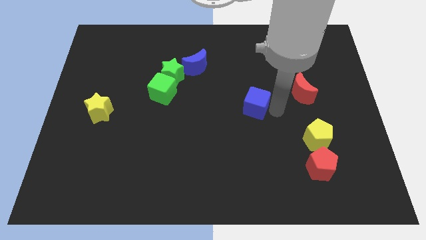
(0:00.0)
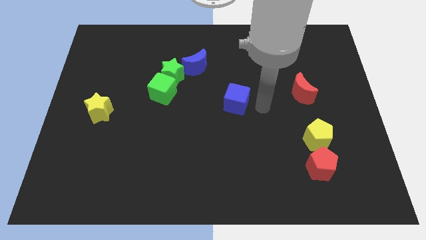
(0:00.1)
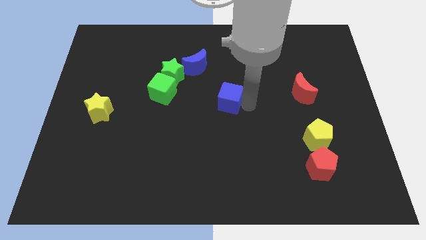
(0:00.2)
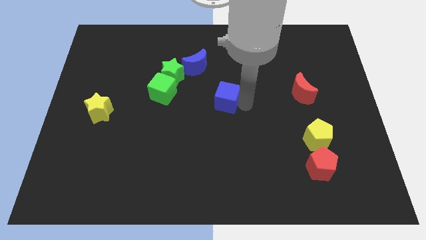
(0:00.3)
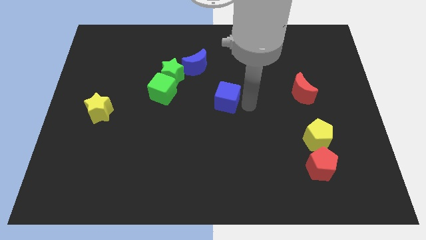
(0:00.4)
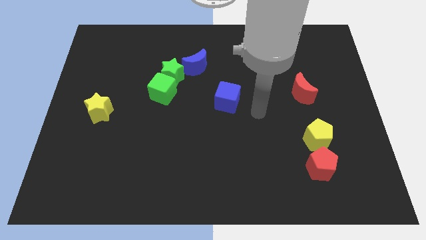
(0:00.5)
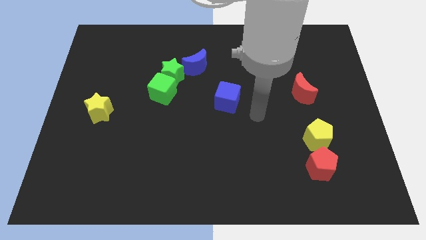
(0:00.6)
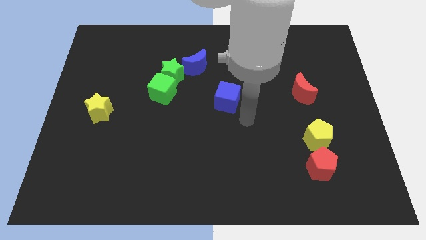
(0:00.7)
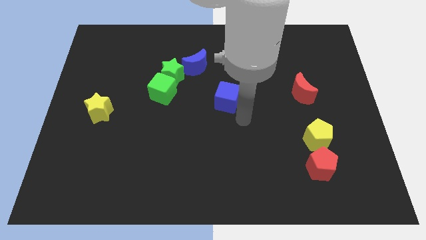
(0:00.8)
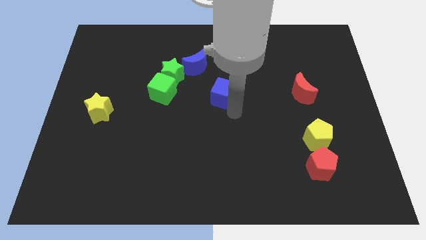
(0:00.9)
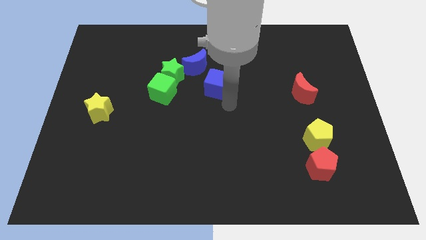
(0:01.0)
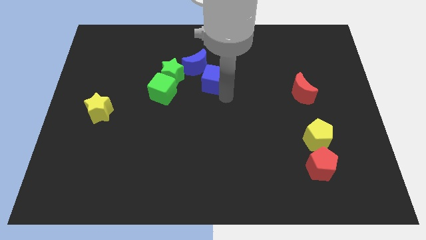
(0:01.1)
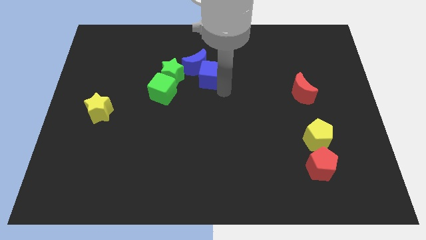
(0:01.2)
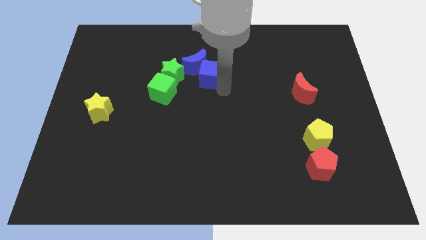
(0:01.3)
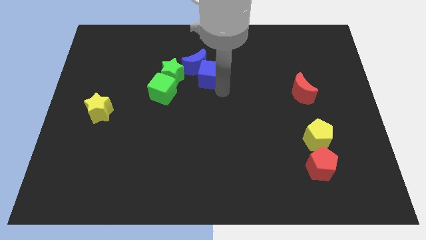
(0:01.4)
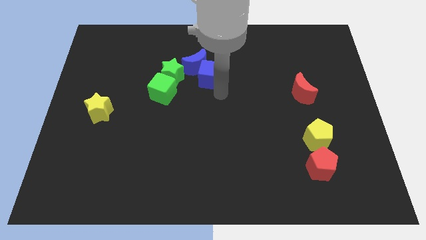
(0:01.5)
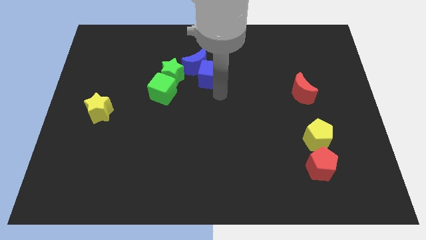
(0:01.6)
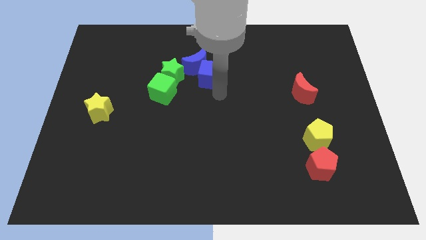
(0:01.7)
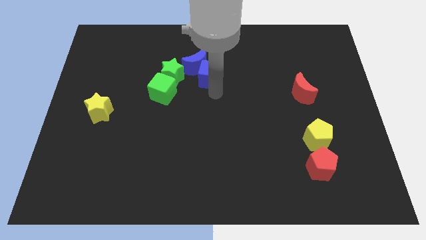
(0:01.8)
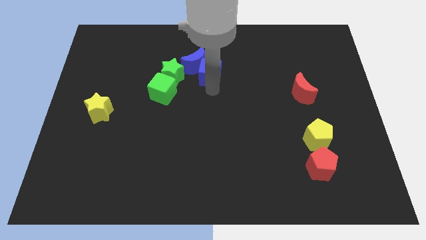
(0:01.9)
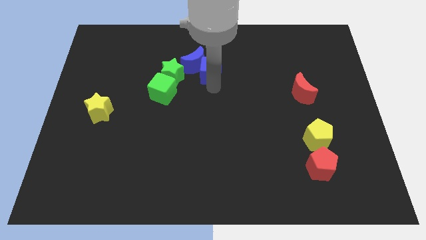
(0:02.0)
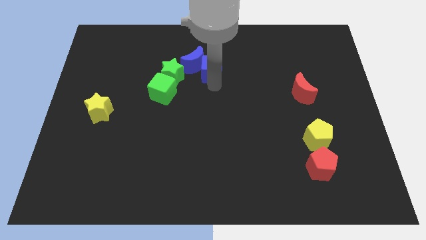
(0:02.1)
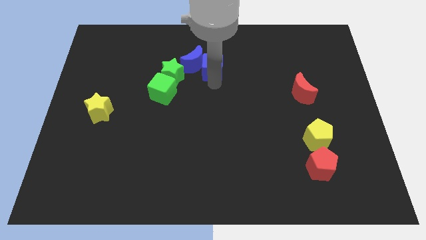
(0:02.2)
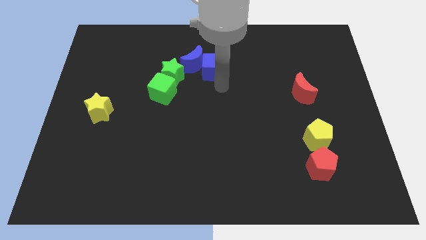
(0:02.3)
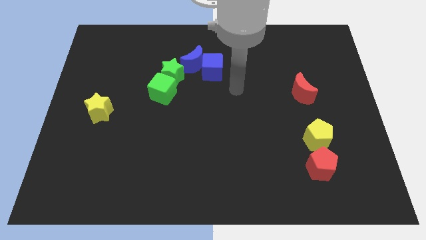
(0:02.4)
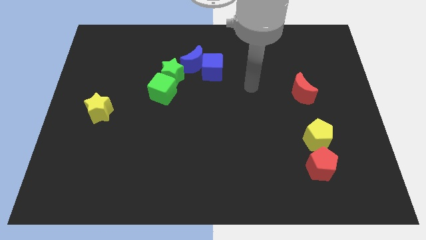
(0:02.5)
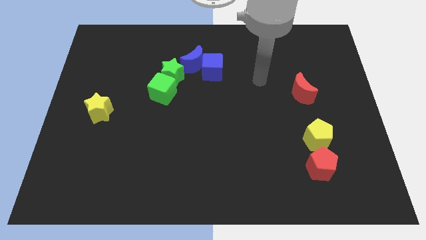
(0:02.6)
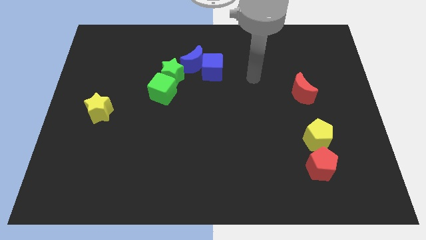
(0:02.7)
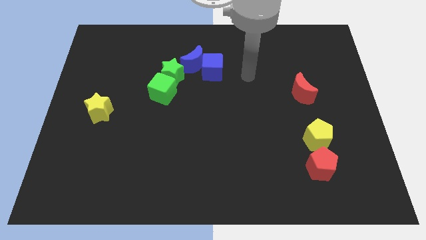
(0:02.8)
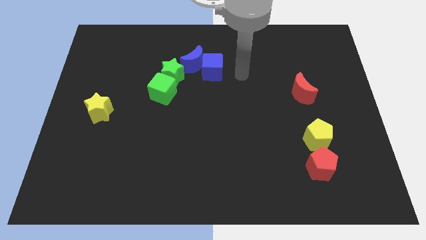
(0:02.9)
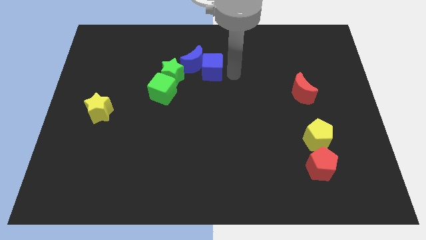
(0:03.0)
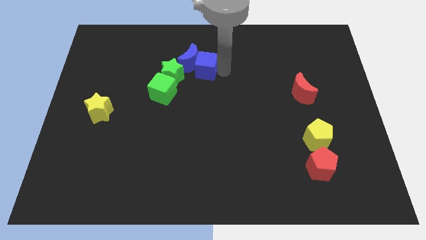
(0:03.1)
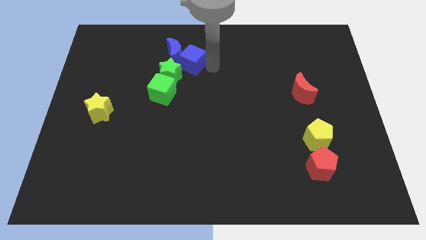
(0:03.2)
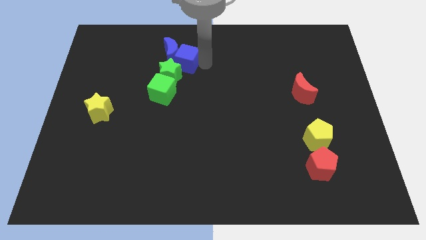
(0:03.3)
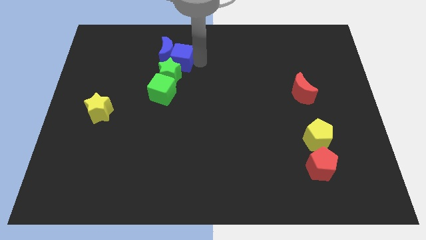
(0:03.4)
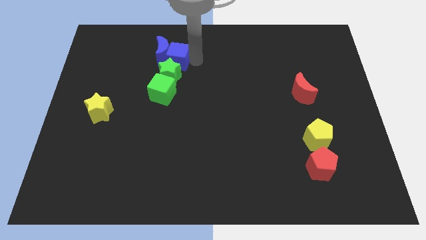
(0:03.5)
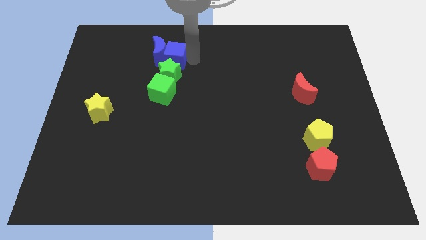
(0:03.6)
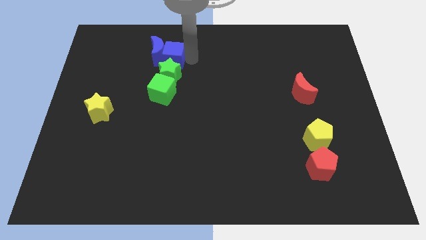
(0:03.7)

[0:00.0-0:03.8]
push blue cube above green star

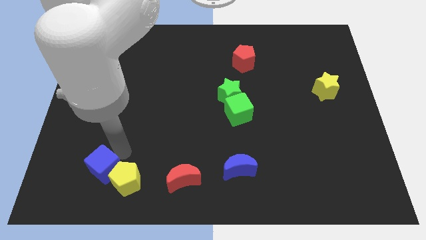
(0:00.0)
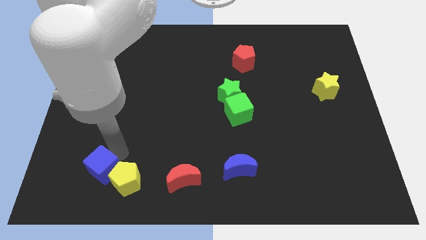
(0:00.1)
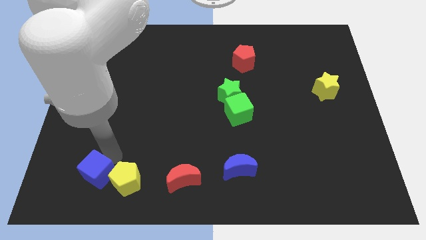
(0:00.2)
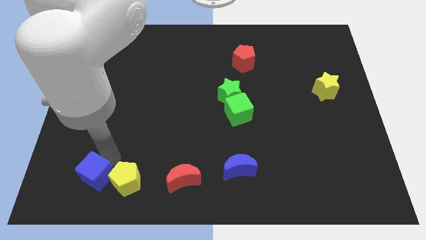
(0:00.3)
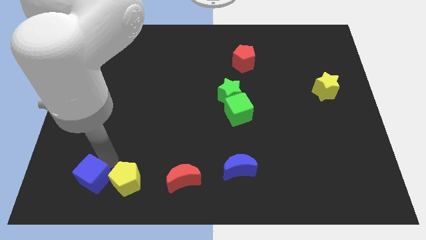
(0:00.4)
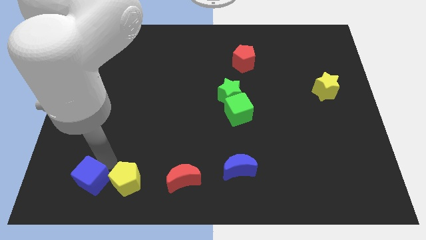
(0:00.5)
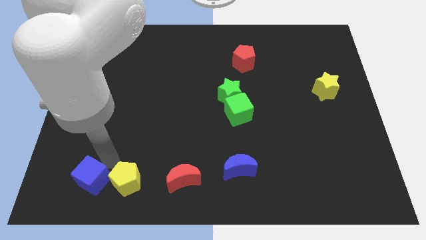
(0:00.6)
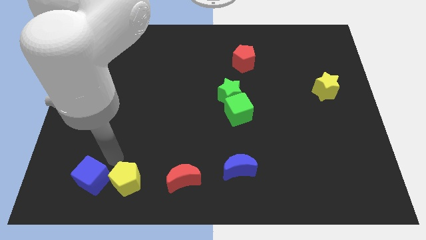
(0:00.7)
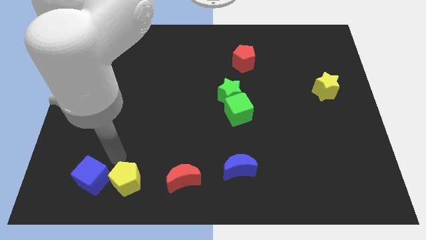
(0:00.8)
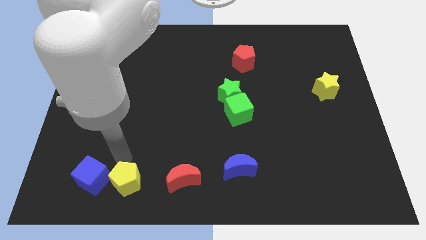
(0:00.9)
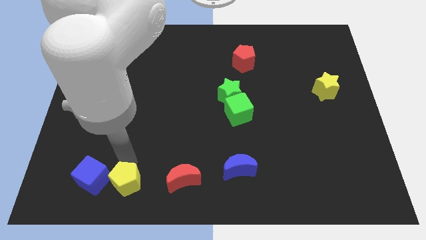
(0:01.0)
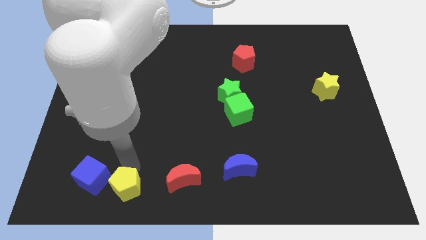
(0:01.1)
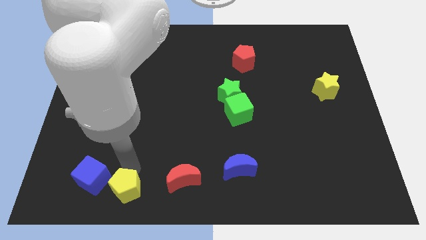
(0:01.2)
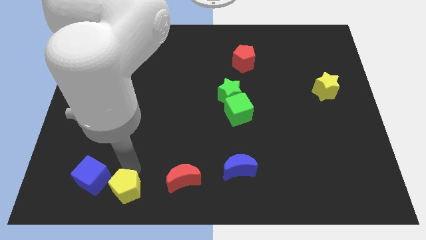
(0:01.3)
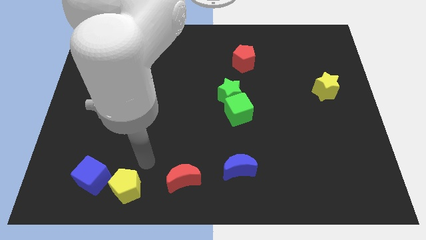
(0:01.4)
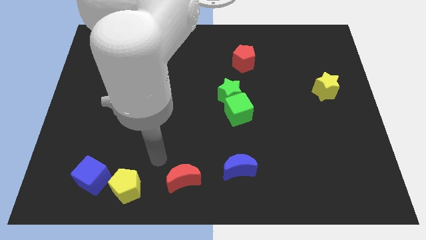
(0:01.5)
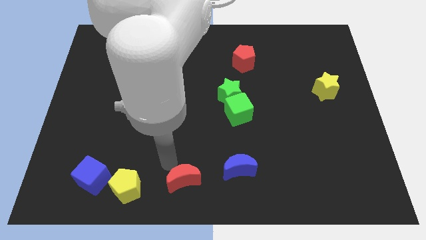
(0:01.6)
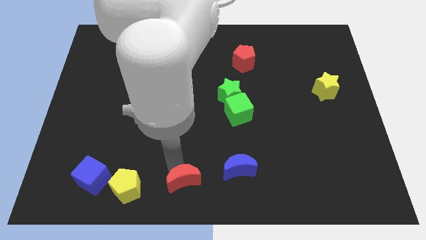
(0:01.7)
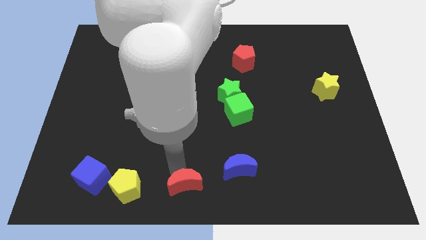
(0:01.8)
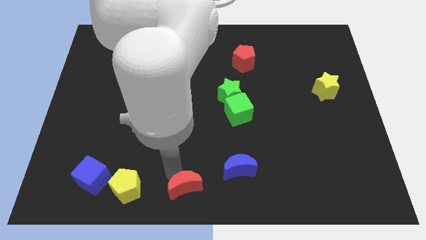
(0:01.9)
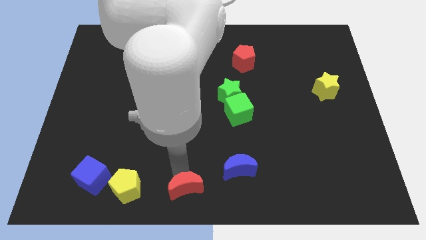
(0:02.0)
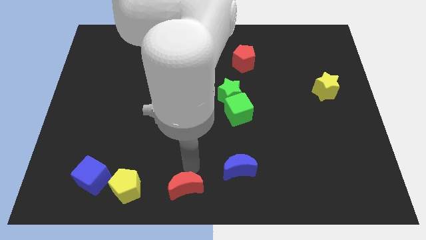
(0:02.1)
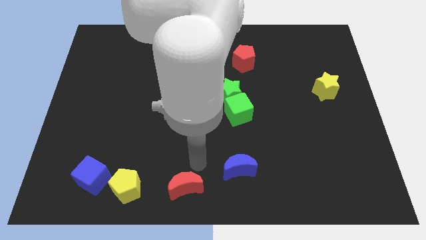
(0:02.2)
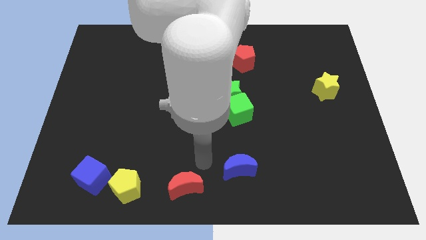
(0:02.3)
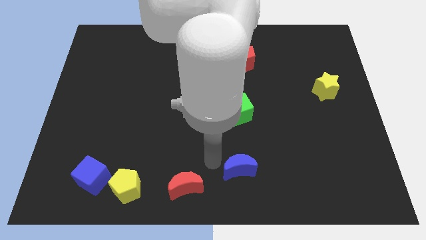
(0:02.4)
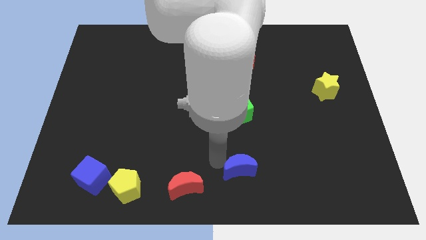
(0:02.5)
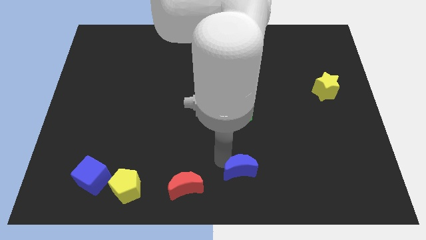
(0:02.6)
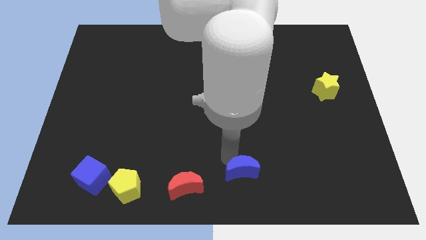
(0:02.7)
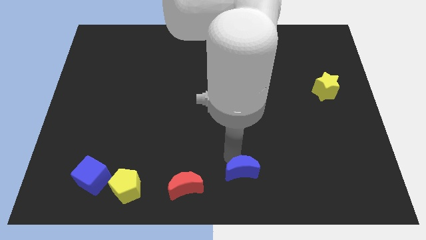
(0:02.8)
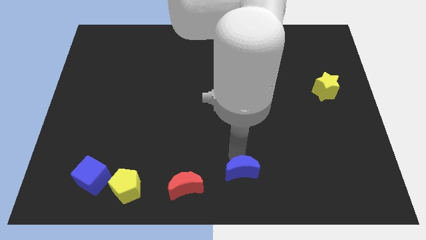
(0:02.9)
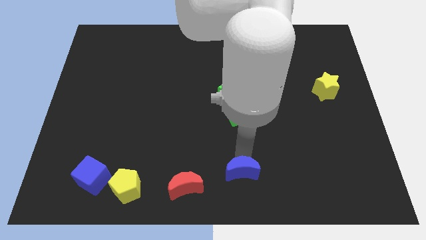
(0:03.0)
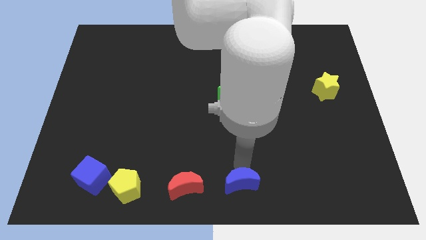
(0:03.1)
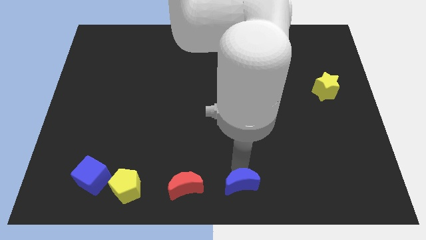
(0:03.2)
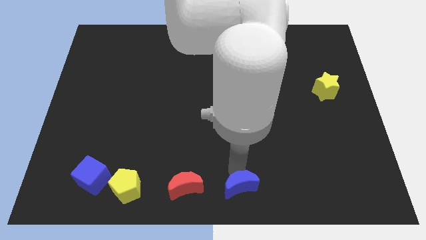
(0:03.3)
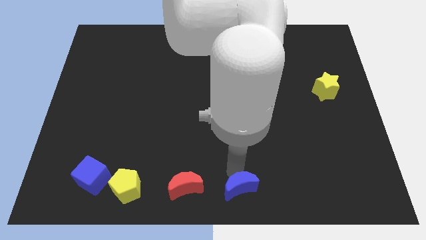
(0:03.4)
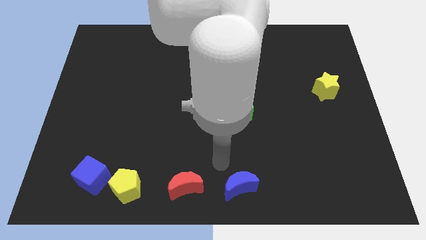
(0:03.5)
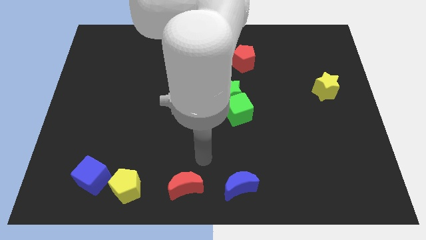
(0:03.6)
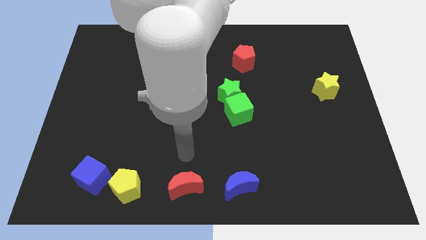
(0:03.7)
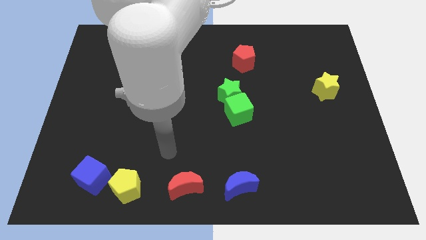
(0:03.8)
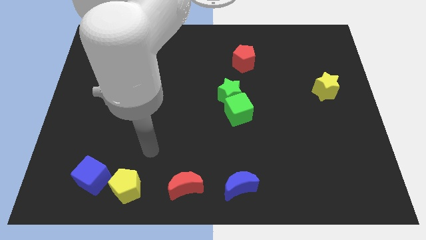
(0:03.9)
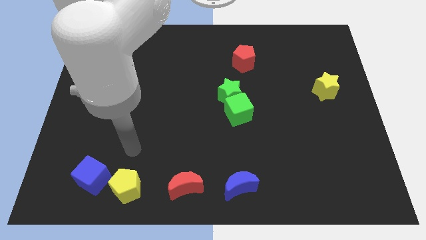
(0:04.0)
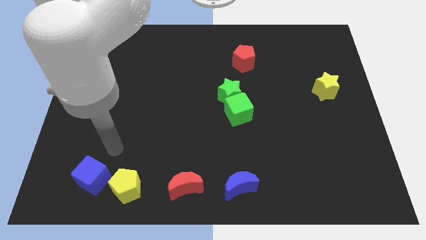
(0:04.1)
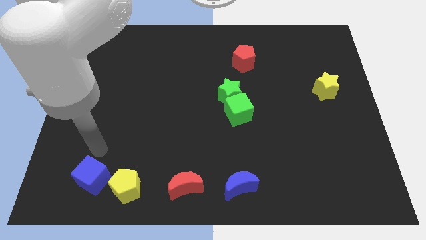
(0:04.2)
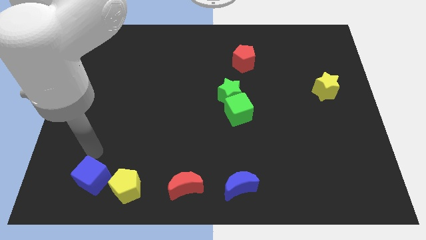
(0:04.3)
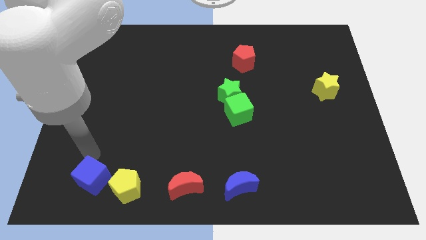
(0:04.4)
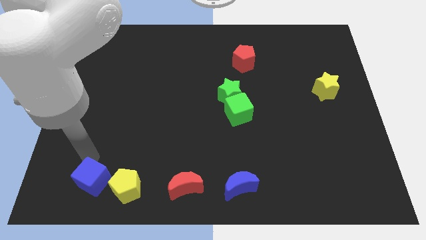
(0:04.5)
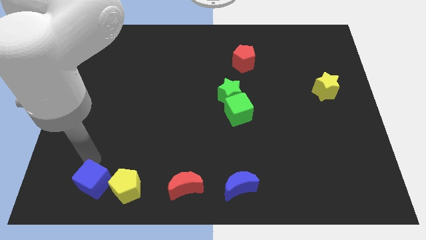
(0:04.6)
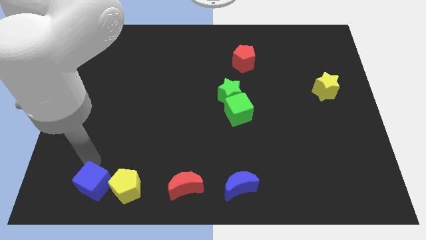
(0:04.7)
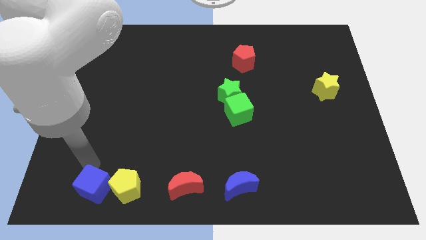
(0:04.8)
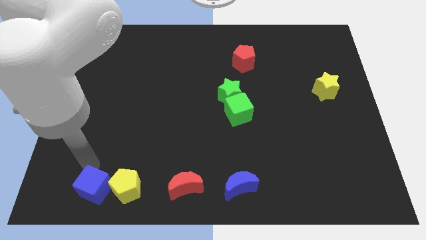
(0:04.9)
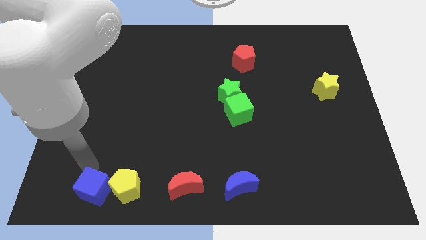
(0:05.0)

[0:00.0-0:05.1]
adjust yellow pentagon red moon blue moon and blue cube at the bottom to form a line

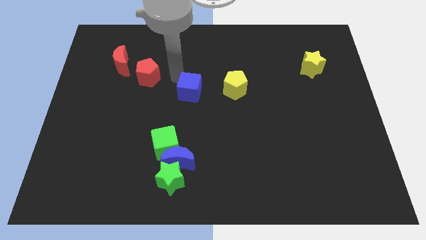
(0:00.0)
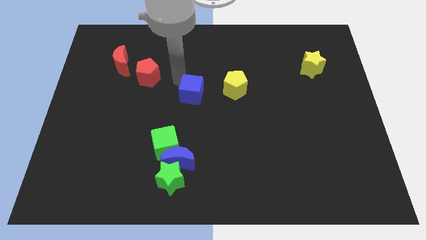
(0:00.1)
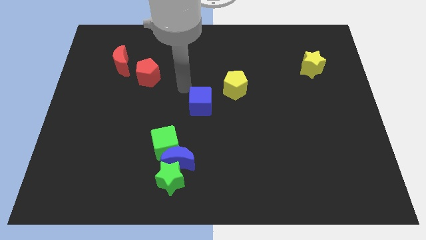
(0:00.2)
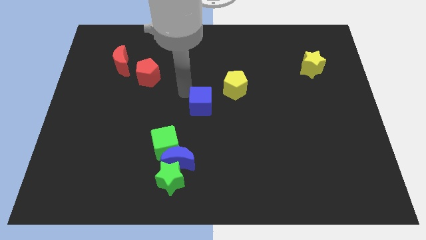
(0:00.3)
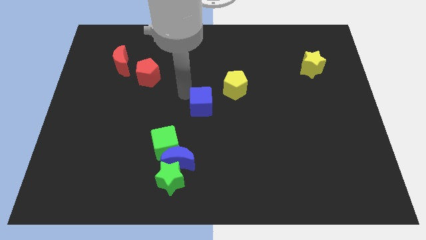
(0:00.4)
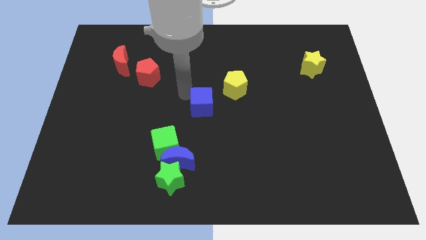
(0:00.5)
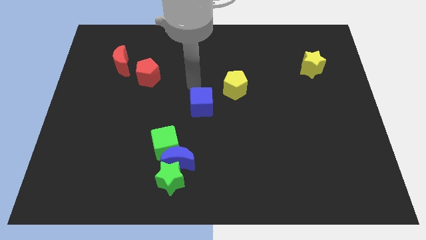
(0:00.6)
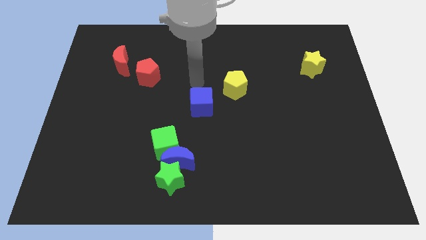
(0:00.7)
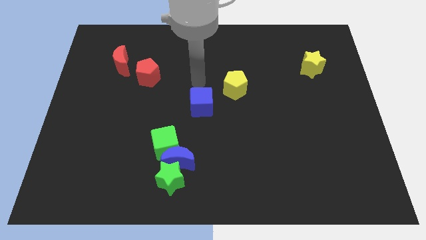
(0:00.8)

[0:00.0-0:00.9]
move the blue cube towards the center of the board
